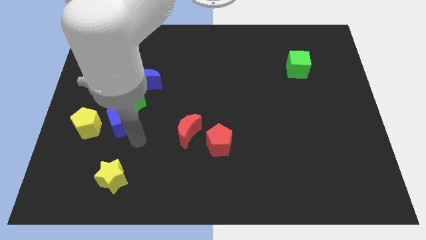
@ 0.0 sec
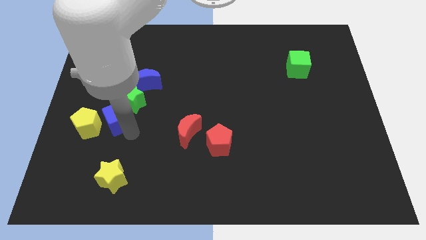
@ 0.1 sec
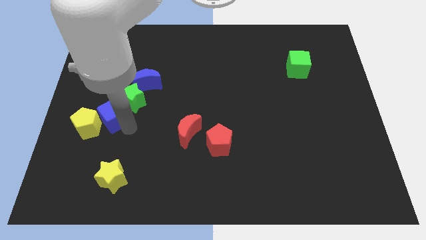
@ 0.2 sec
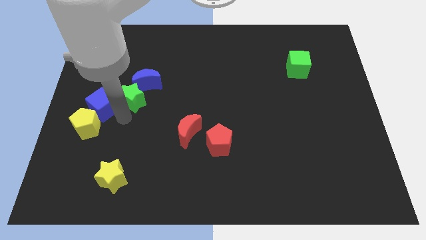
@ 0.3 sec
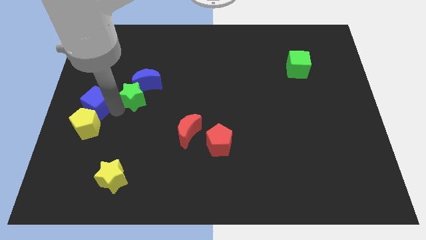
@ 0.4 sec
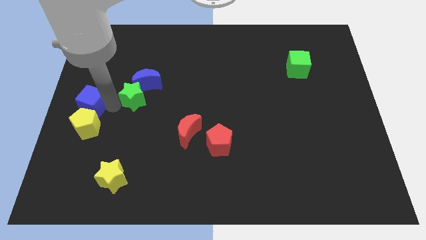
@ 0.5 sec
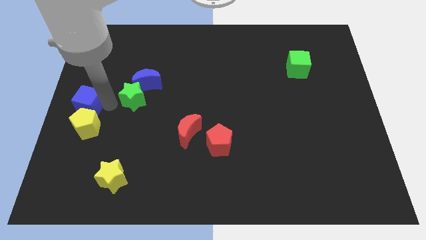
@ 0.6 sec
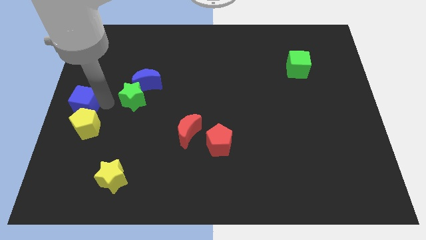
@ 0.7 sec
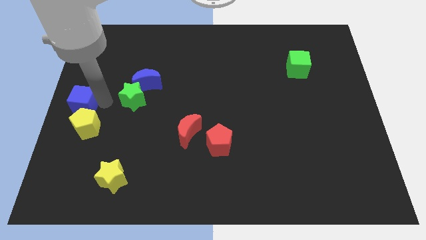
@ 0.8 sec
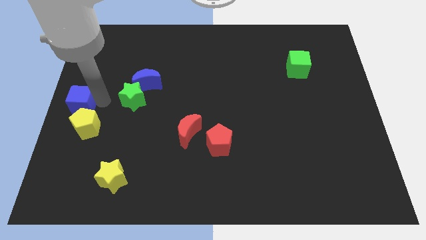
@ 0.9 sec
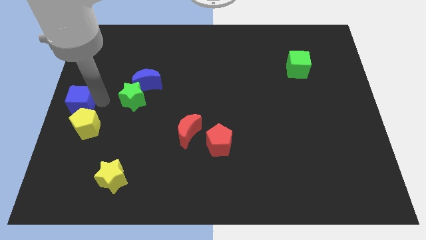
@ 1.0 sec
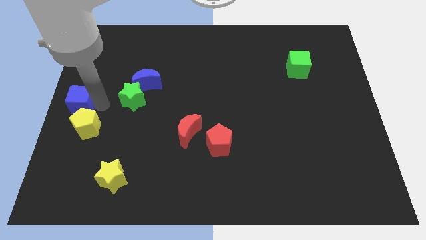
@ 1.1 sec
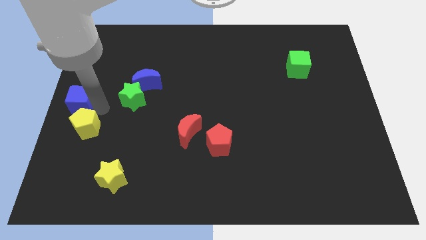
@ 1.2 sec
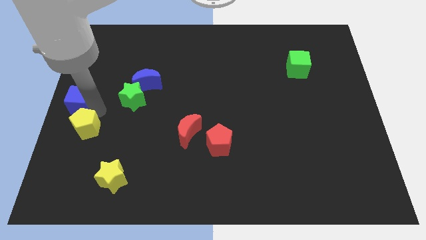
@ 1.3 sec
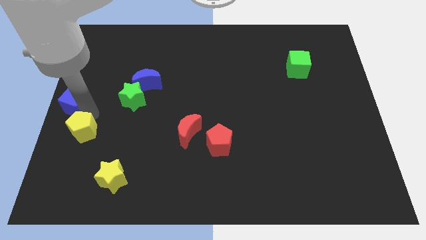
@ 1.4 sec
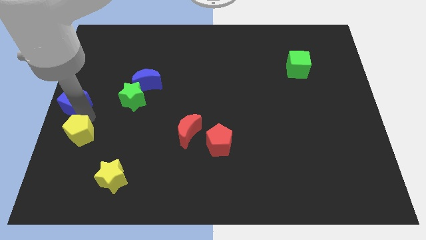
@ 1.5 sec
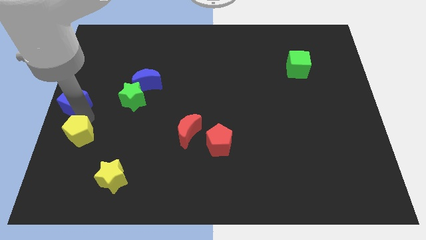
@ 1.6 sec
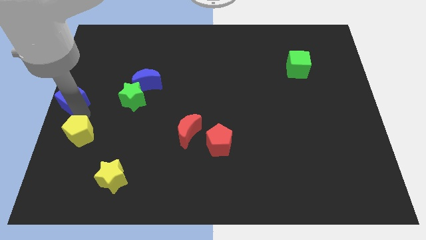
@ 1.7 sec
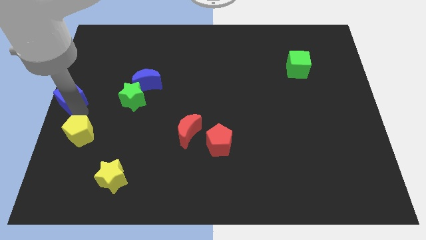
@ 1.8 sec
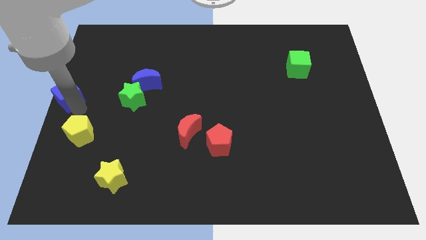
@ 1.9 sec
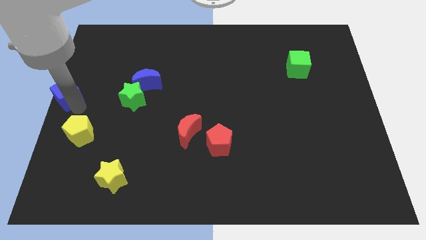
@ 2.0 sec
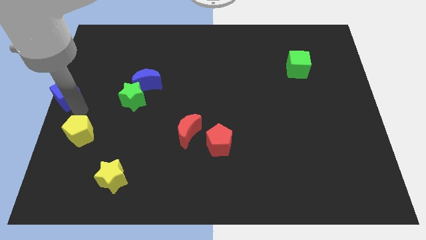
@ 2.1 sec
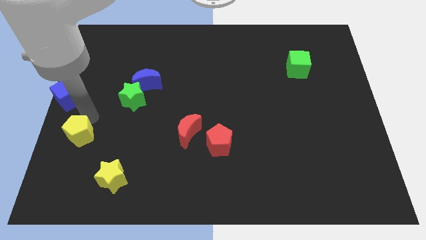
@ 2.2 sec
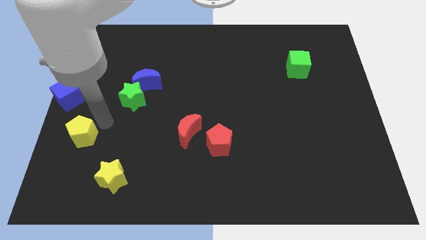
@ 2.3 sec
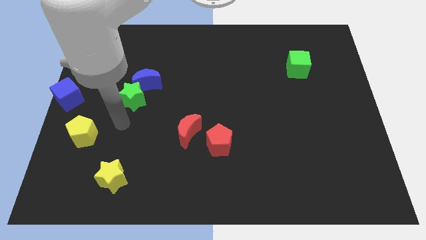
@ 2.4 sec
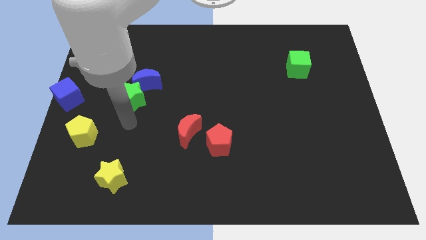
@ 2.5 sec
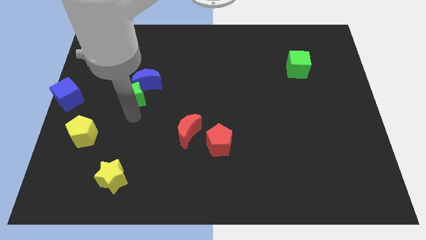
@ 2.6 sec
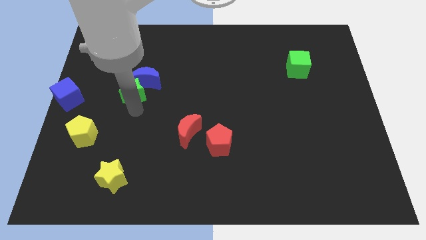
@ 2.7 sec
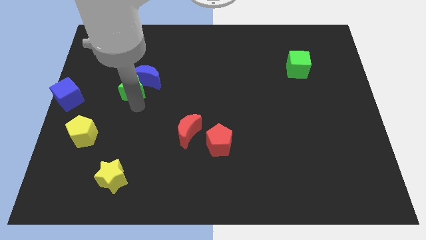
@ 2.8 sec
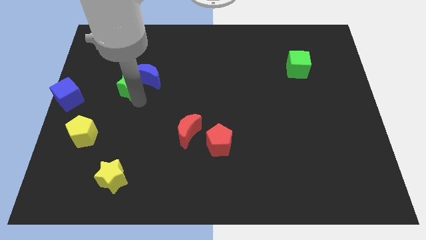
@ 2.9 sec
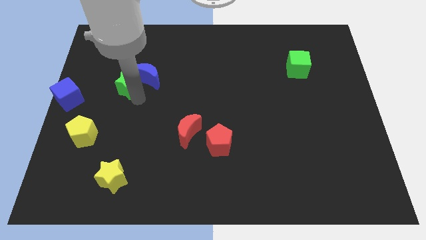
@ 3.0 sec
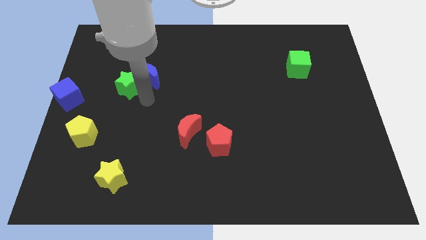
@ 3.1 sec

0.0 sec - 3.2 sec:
place the blue cube to the left center of the board

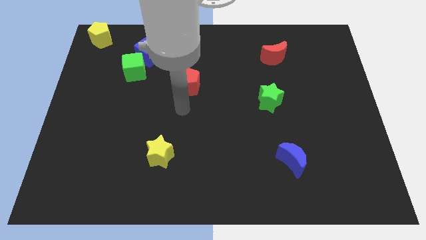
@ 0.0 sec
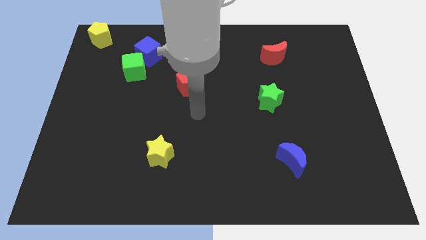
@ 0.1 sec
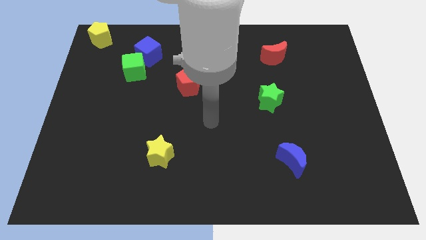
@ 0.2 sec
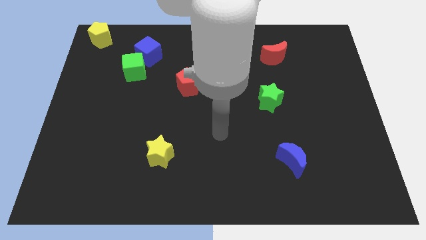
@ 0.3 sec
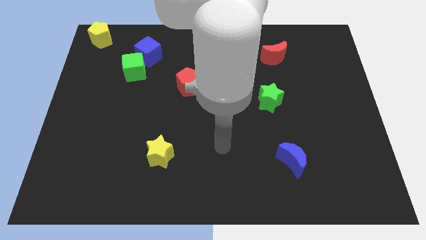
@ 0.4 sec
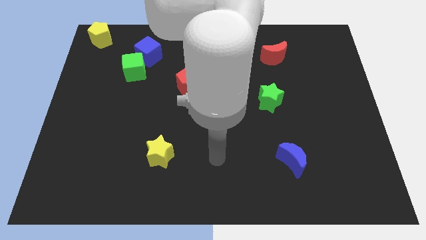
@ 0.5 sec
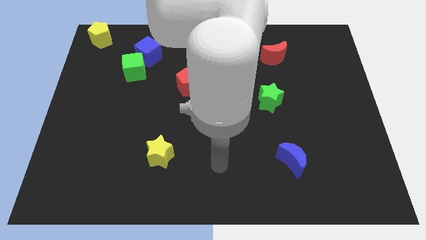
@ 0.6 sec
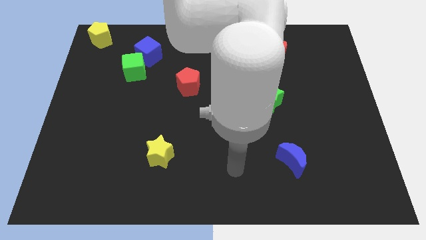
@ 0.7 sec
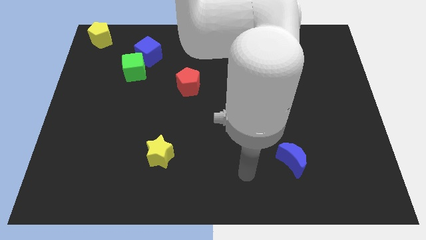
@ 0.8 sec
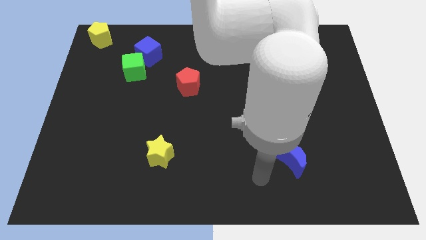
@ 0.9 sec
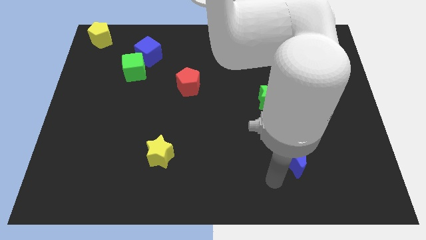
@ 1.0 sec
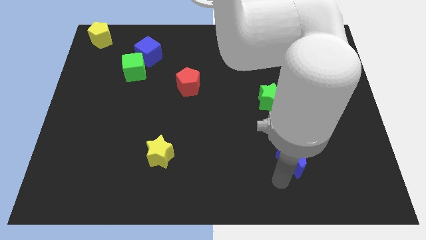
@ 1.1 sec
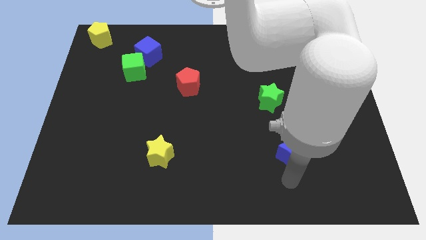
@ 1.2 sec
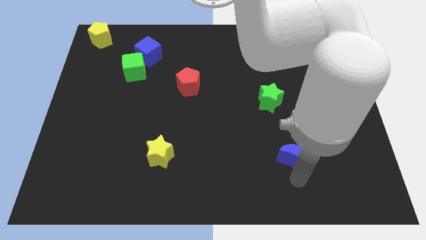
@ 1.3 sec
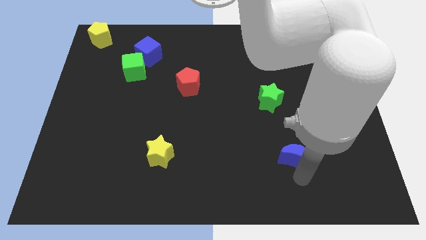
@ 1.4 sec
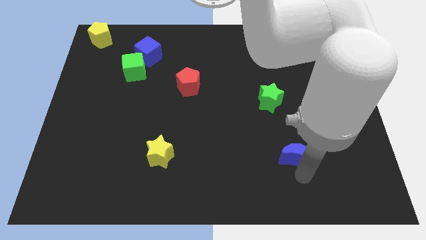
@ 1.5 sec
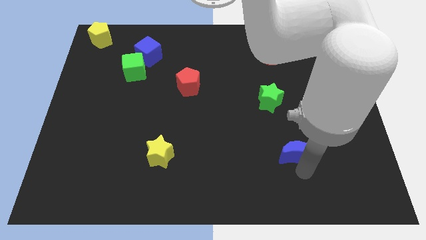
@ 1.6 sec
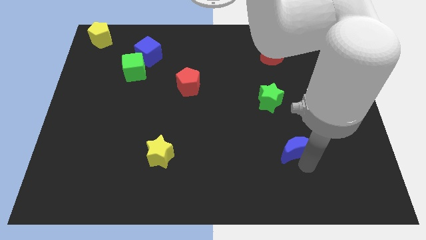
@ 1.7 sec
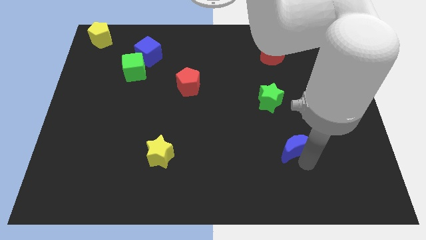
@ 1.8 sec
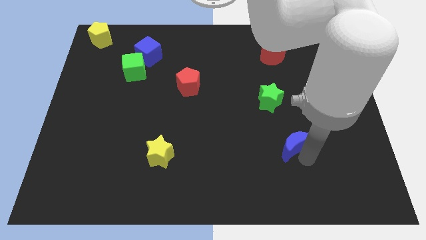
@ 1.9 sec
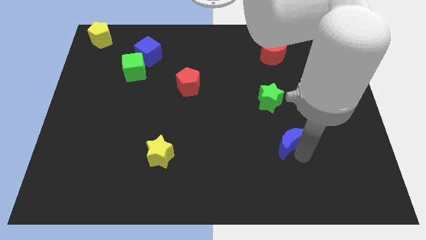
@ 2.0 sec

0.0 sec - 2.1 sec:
push the blue moon towards the top side of the board

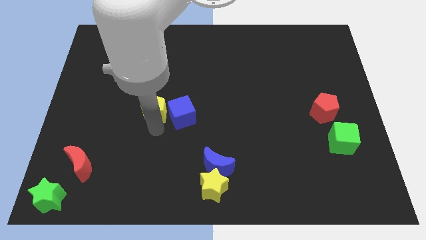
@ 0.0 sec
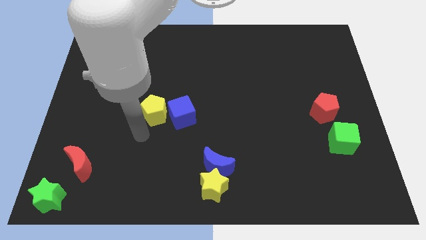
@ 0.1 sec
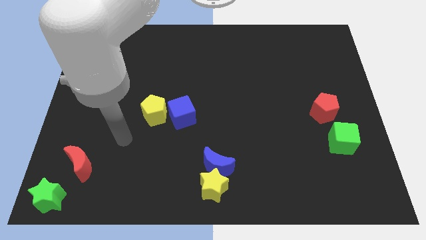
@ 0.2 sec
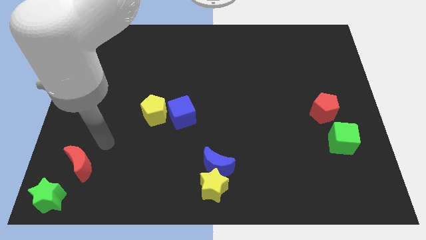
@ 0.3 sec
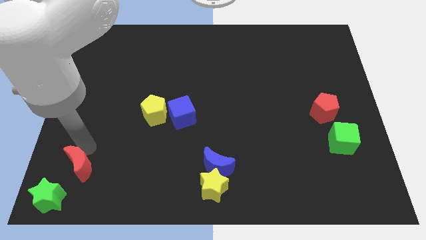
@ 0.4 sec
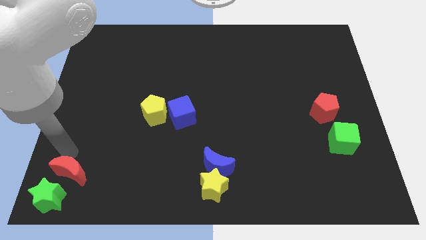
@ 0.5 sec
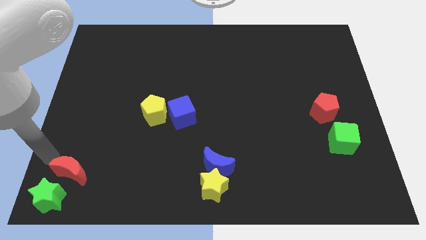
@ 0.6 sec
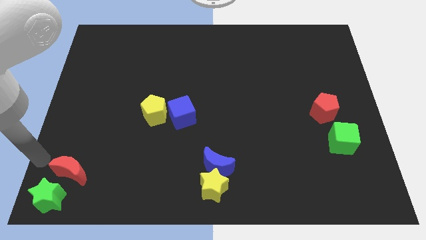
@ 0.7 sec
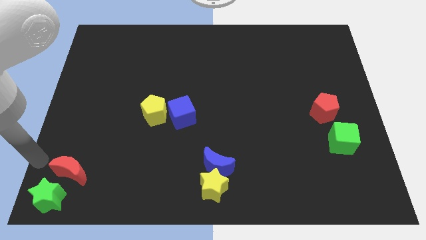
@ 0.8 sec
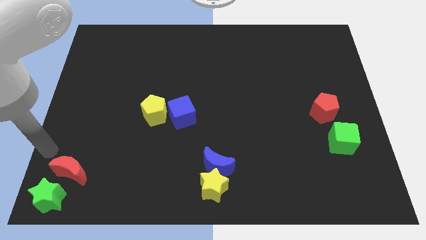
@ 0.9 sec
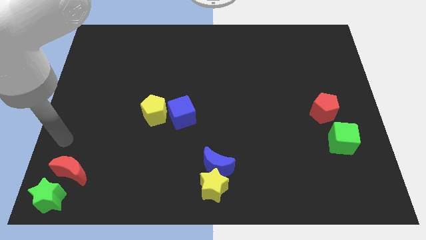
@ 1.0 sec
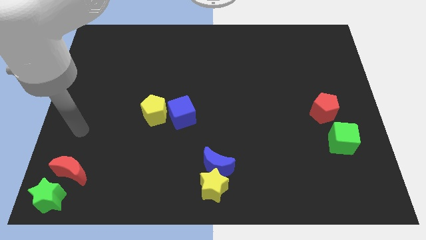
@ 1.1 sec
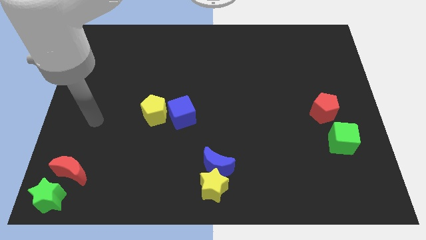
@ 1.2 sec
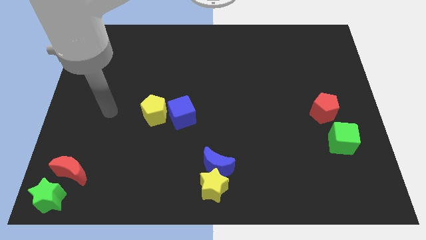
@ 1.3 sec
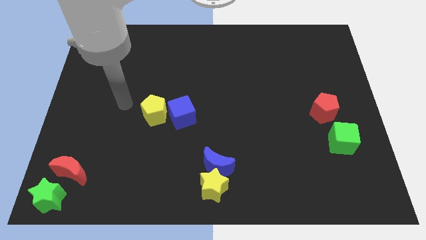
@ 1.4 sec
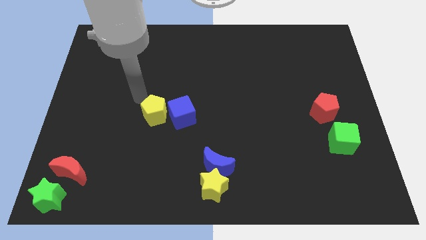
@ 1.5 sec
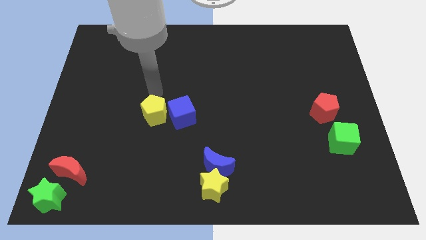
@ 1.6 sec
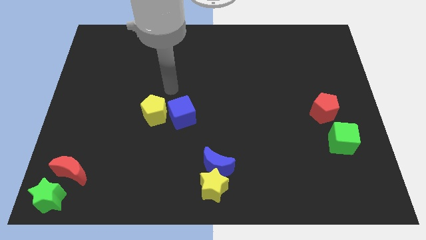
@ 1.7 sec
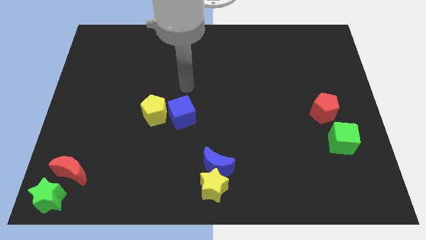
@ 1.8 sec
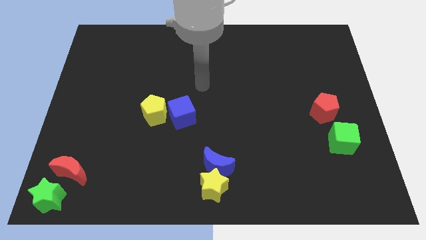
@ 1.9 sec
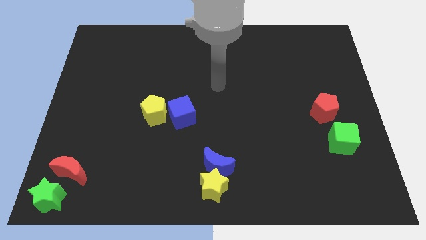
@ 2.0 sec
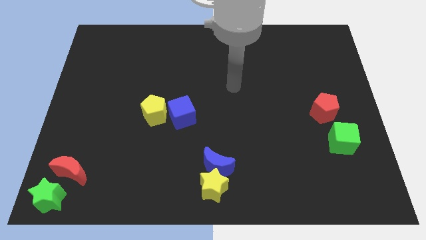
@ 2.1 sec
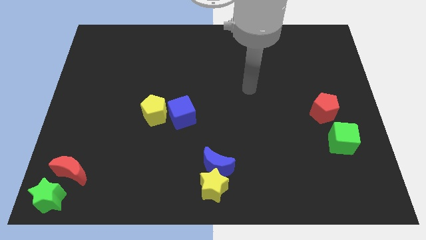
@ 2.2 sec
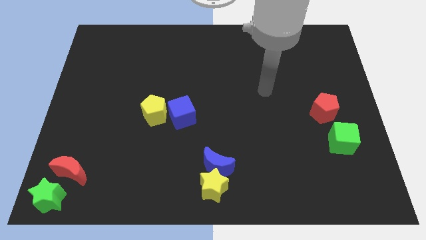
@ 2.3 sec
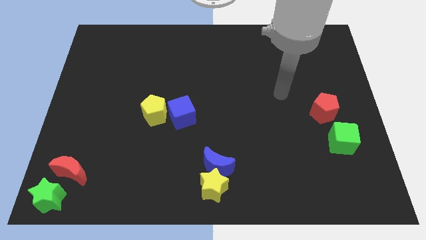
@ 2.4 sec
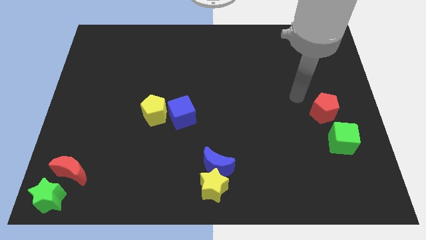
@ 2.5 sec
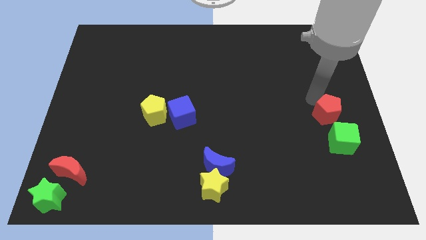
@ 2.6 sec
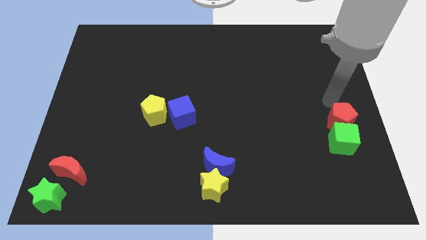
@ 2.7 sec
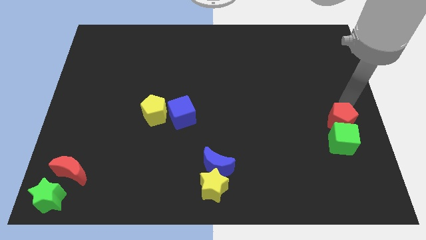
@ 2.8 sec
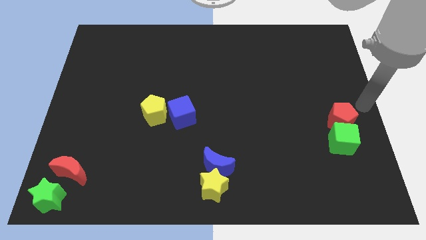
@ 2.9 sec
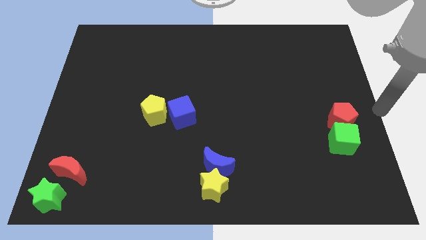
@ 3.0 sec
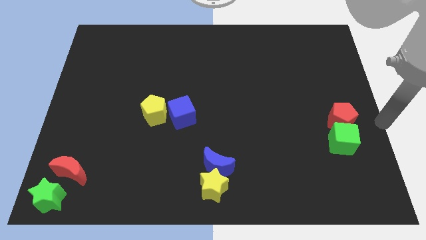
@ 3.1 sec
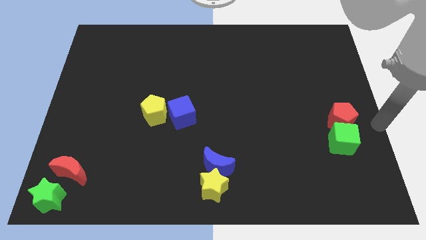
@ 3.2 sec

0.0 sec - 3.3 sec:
push the red moon downwards slightly

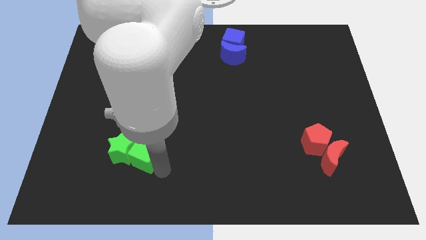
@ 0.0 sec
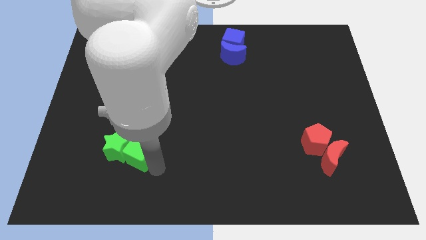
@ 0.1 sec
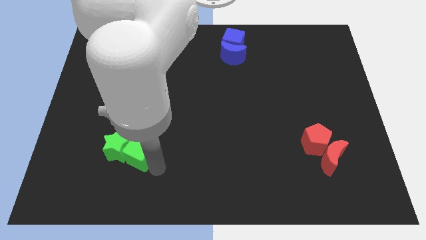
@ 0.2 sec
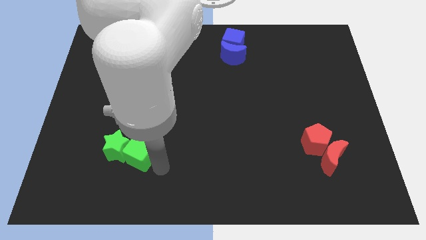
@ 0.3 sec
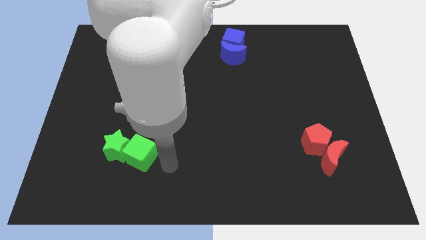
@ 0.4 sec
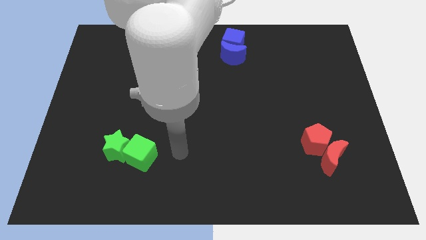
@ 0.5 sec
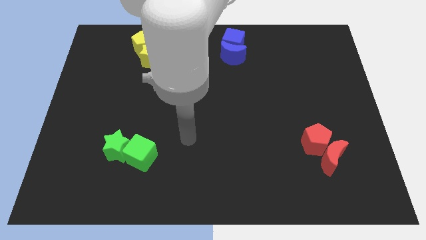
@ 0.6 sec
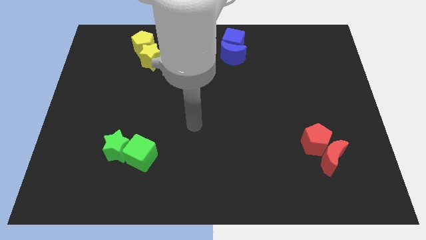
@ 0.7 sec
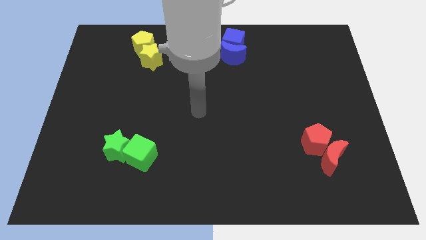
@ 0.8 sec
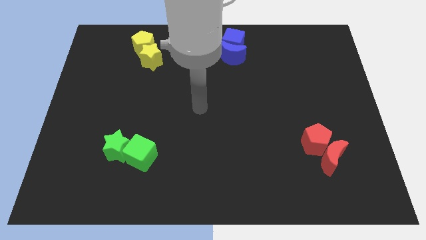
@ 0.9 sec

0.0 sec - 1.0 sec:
move your arm away from the green cube
